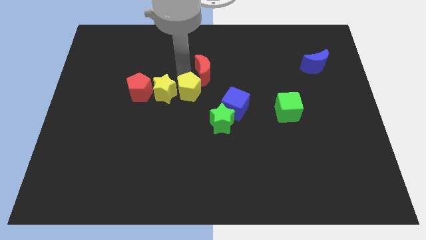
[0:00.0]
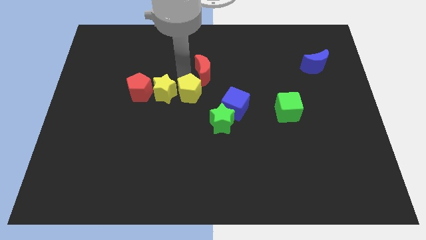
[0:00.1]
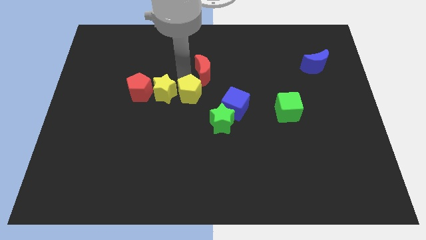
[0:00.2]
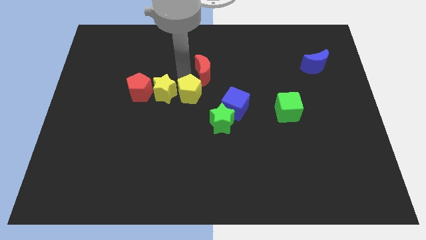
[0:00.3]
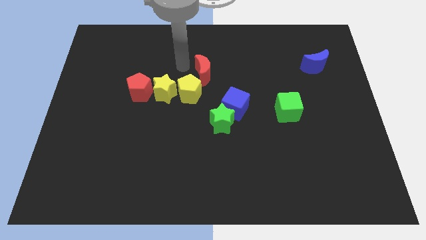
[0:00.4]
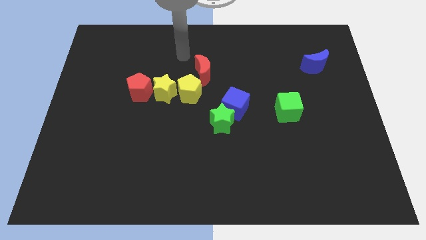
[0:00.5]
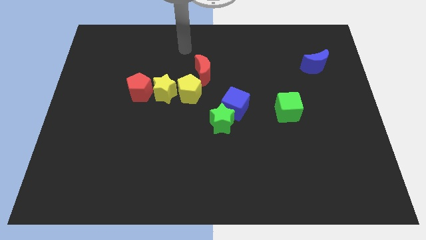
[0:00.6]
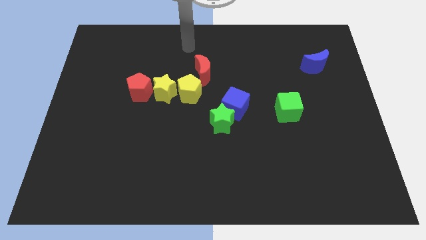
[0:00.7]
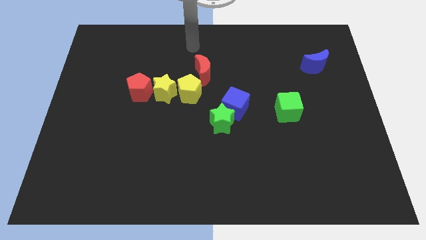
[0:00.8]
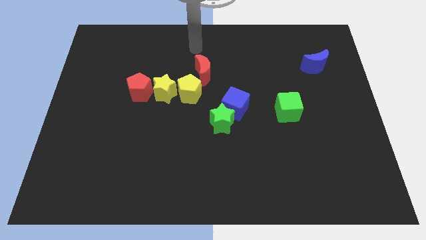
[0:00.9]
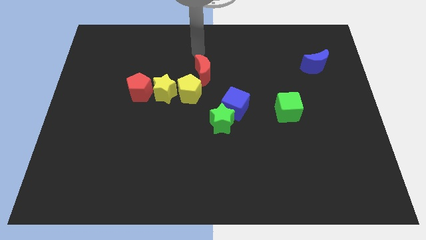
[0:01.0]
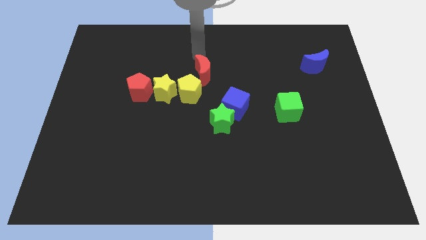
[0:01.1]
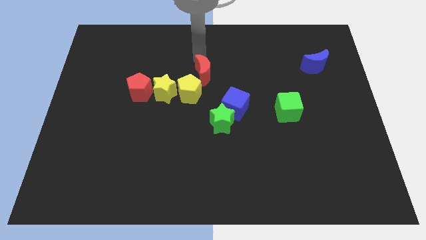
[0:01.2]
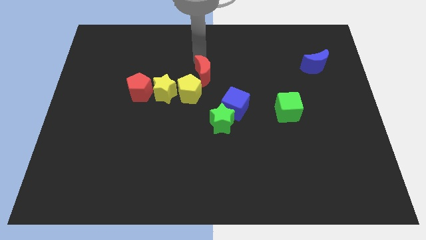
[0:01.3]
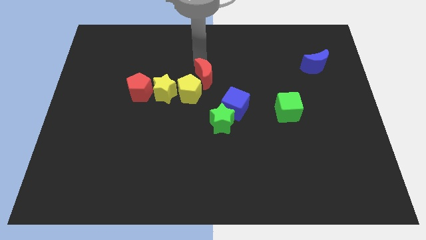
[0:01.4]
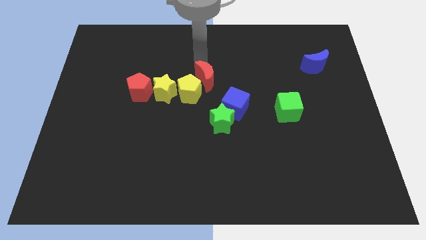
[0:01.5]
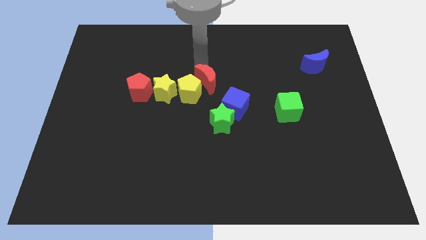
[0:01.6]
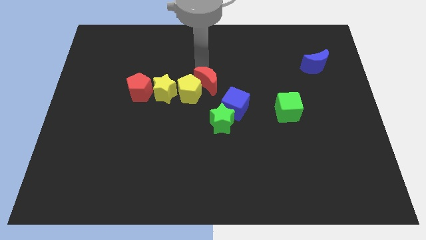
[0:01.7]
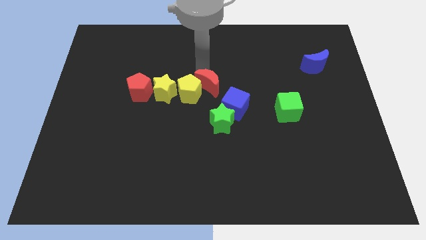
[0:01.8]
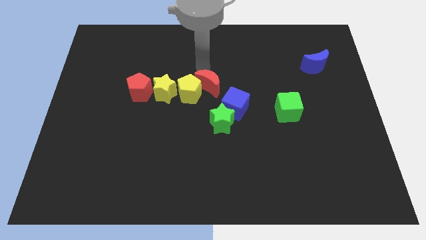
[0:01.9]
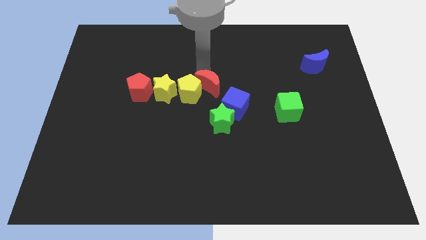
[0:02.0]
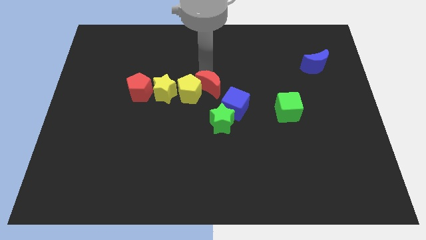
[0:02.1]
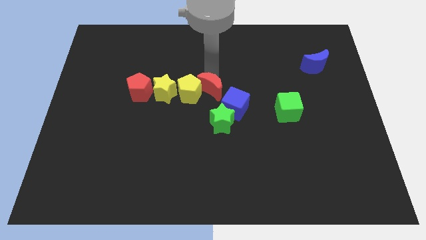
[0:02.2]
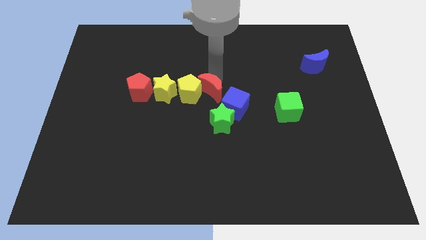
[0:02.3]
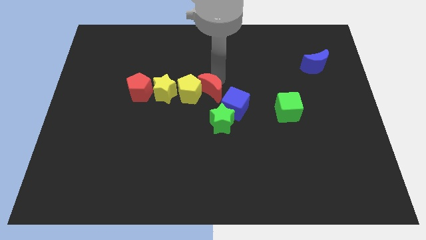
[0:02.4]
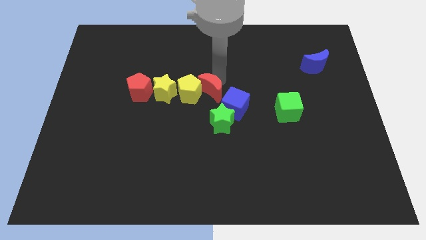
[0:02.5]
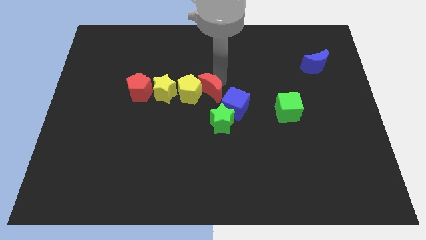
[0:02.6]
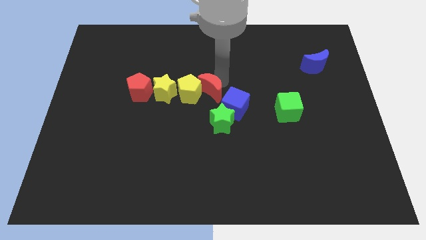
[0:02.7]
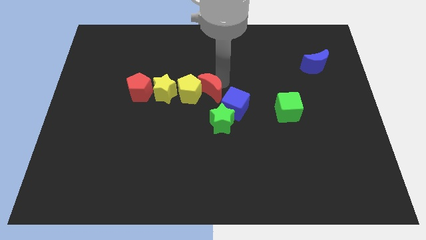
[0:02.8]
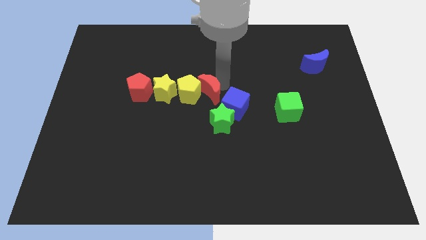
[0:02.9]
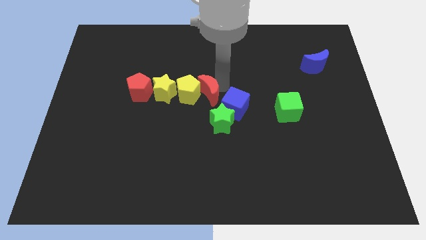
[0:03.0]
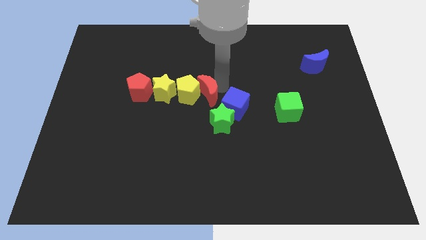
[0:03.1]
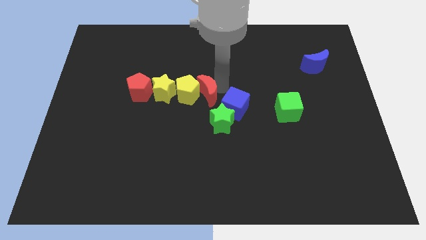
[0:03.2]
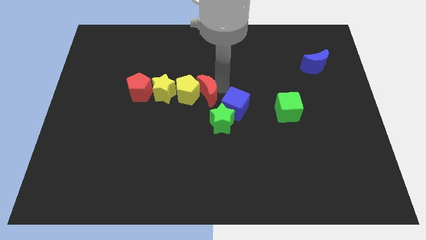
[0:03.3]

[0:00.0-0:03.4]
move red crescent right to the yellow pentagon

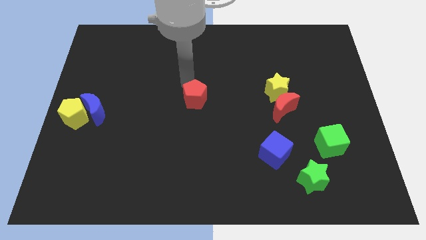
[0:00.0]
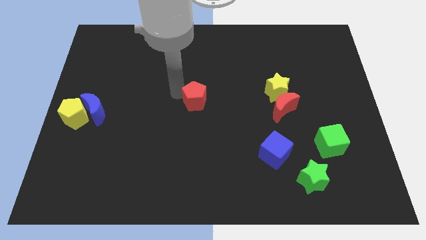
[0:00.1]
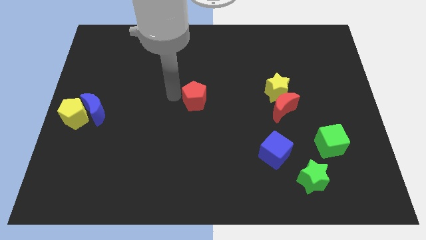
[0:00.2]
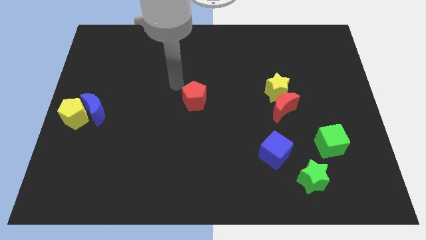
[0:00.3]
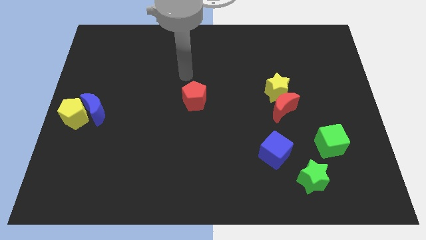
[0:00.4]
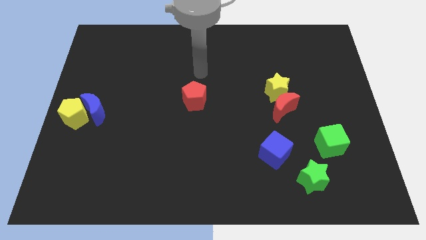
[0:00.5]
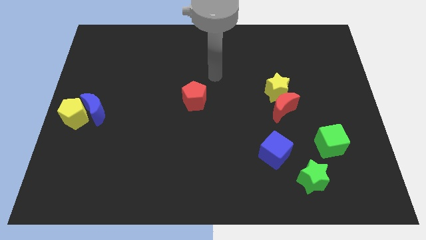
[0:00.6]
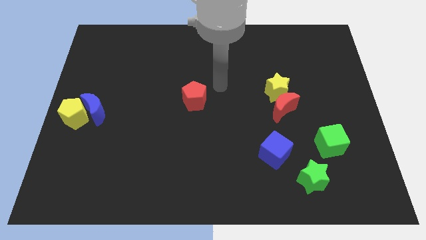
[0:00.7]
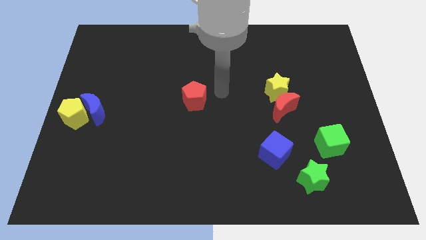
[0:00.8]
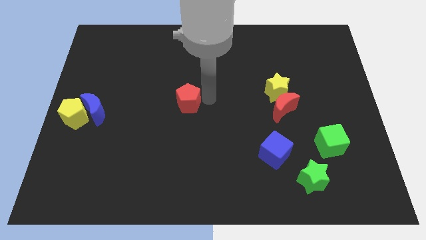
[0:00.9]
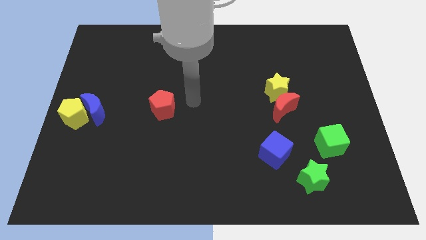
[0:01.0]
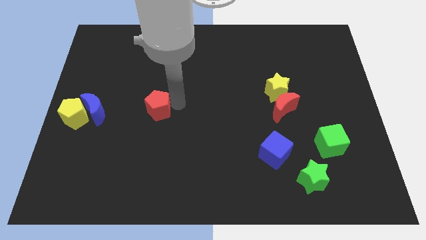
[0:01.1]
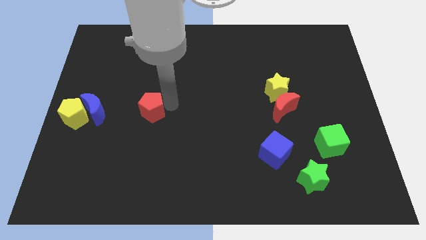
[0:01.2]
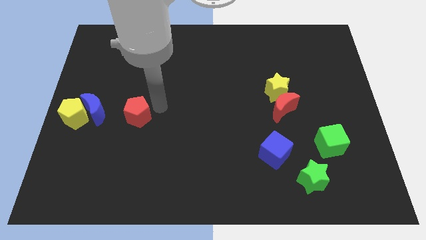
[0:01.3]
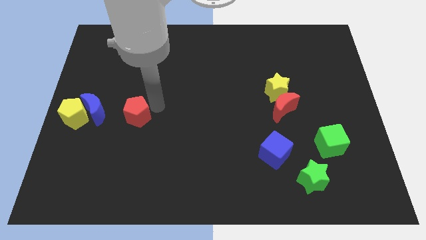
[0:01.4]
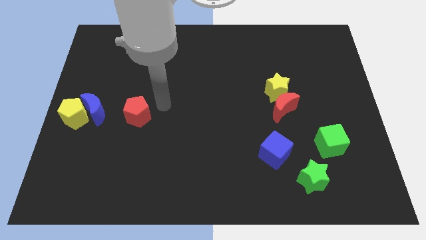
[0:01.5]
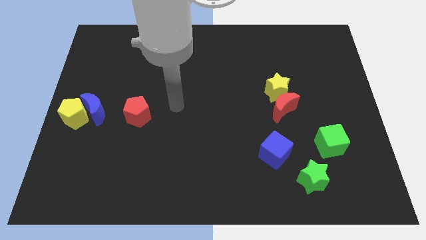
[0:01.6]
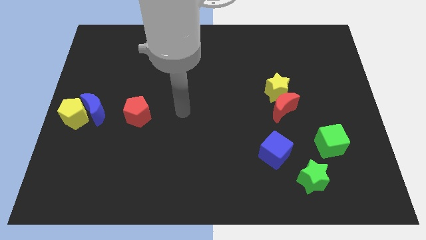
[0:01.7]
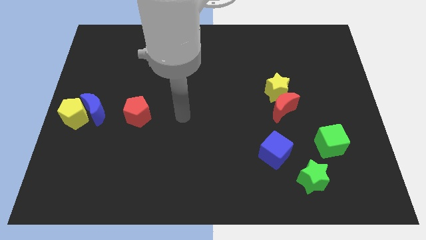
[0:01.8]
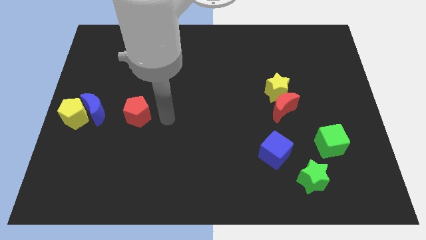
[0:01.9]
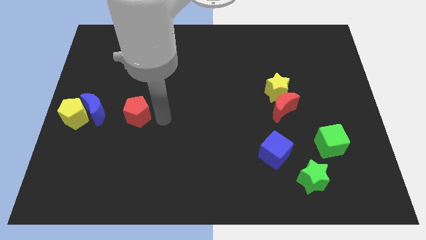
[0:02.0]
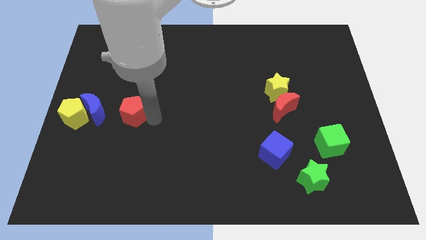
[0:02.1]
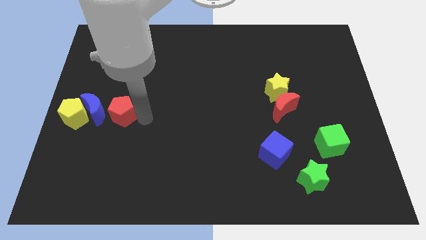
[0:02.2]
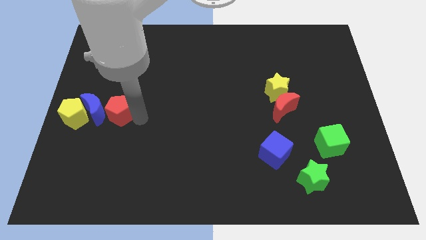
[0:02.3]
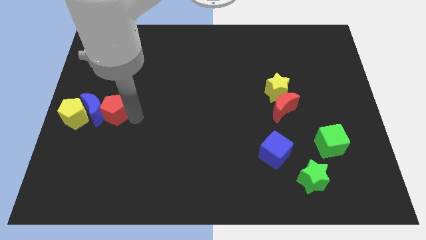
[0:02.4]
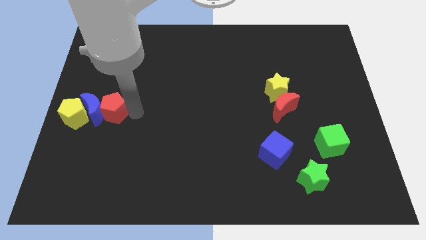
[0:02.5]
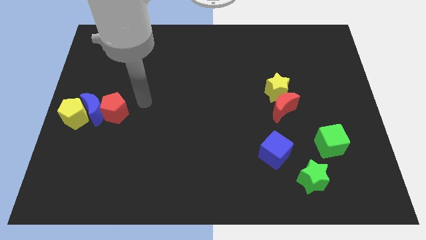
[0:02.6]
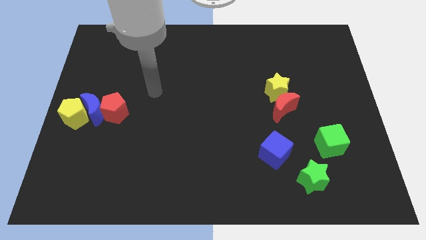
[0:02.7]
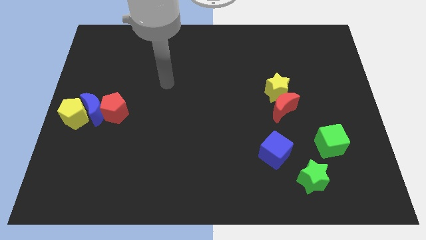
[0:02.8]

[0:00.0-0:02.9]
make the red pentagon to touch the blue crescent

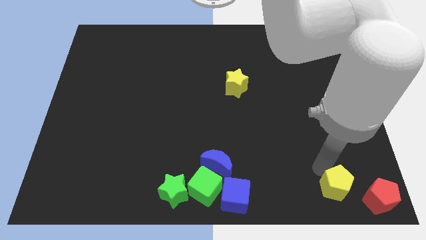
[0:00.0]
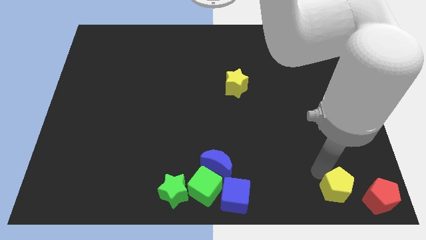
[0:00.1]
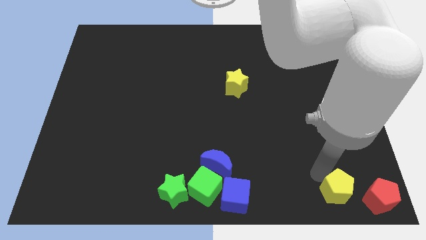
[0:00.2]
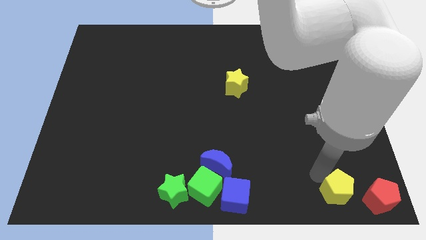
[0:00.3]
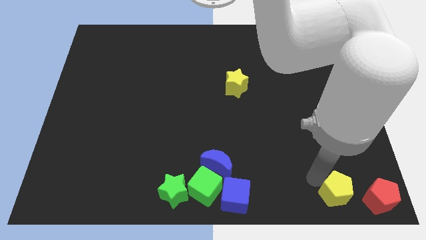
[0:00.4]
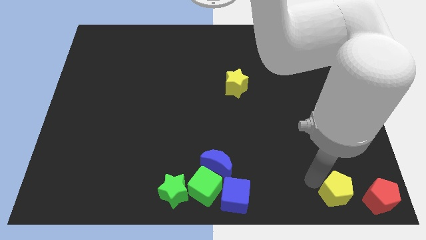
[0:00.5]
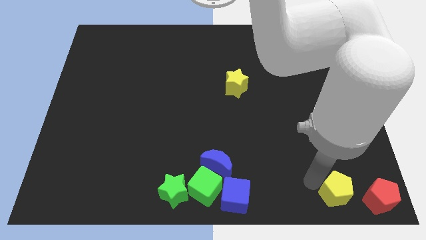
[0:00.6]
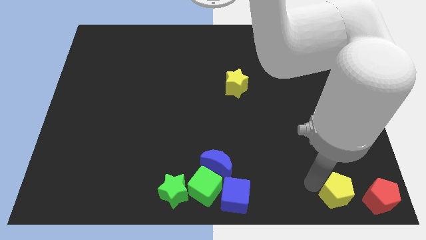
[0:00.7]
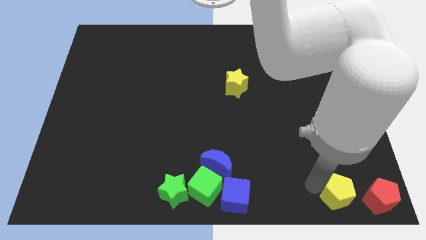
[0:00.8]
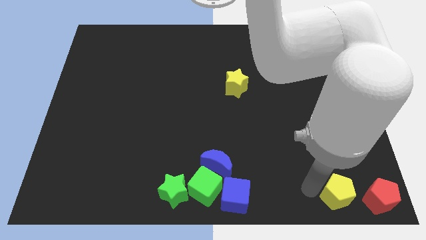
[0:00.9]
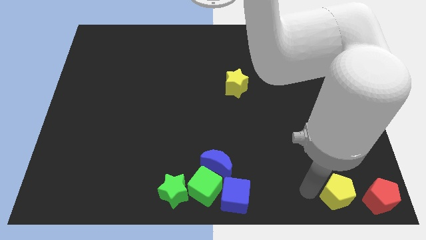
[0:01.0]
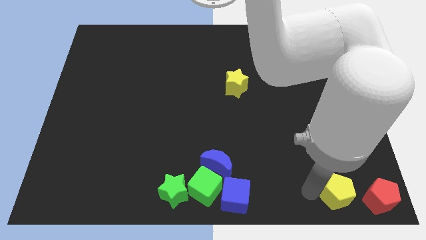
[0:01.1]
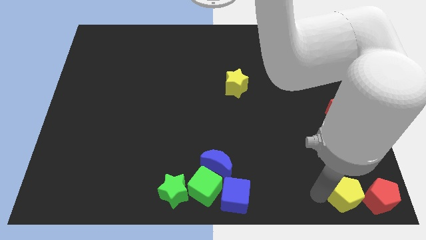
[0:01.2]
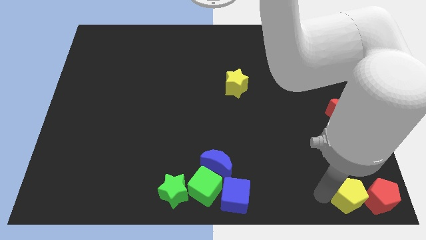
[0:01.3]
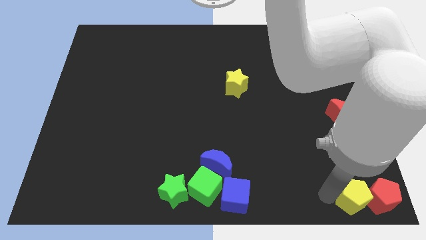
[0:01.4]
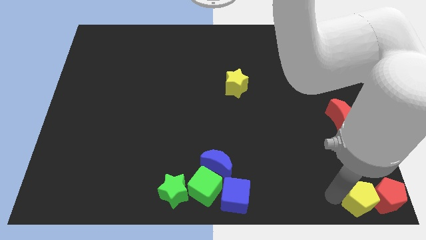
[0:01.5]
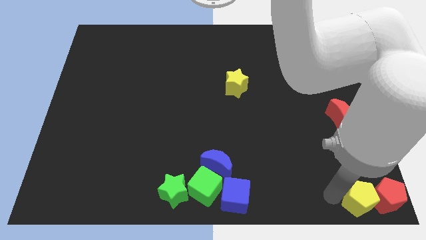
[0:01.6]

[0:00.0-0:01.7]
move the yellow pentagon towards the left side of red pentagon

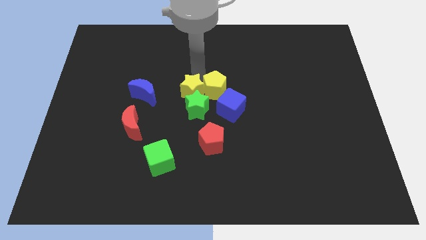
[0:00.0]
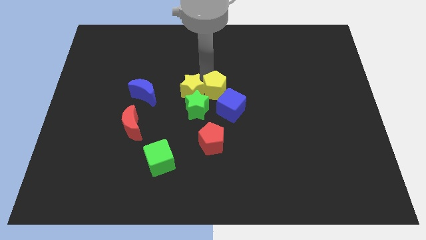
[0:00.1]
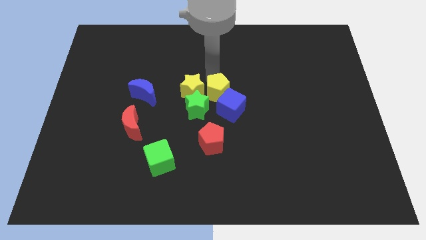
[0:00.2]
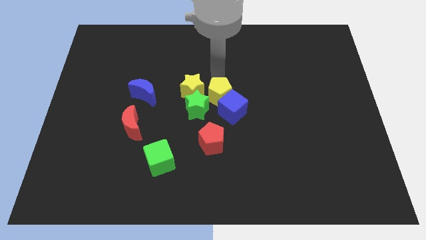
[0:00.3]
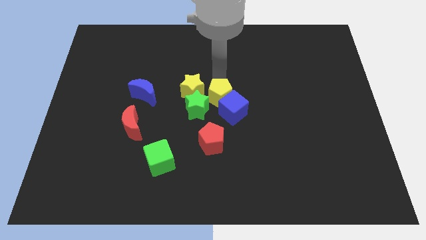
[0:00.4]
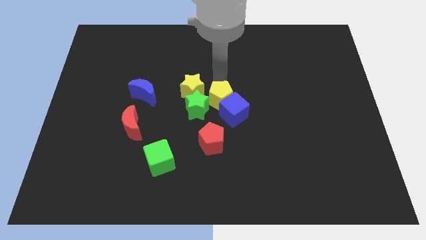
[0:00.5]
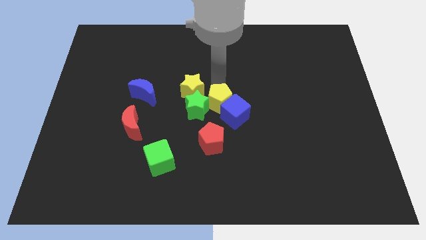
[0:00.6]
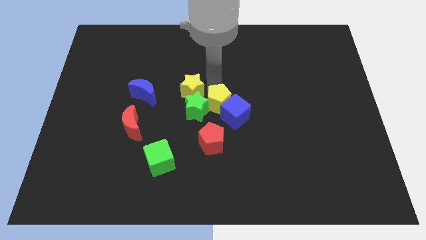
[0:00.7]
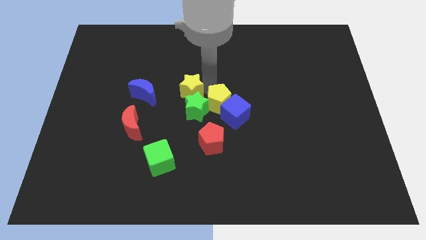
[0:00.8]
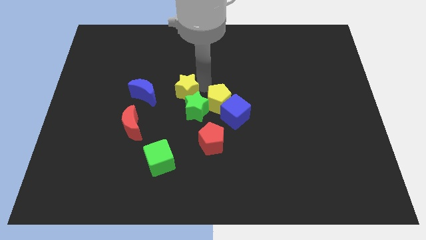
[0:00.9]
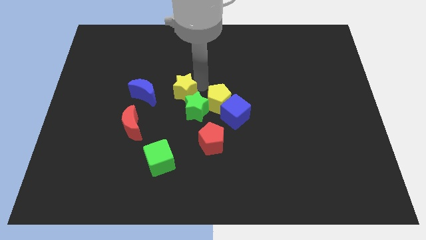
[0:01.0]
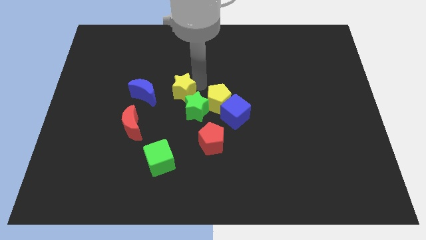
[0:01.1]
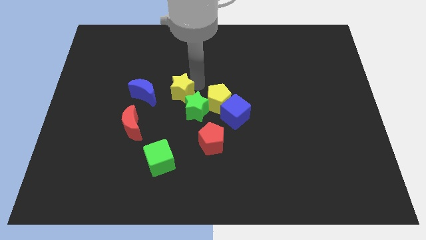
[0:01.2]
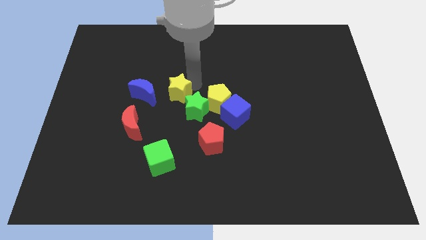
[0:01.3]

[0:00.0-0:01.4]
separate the yellow pentagon and yellow star from each other
